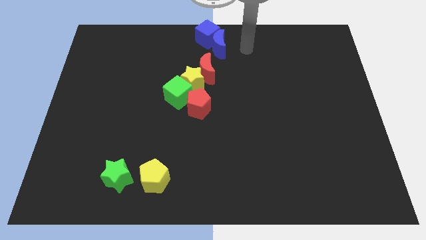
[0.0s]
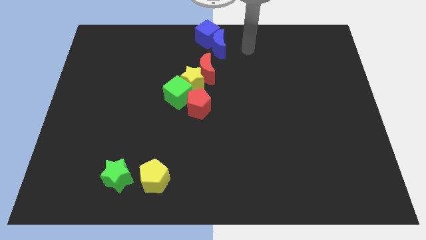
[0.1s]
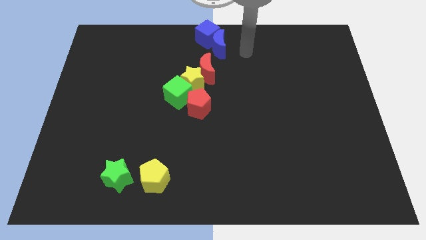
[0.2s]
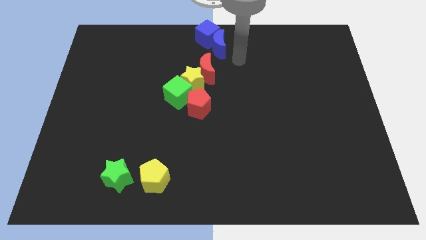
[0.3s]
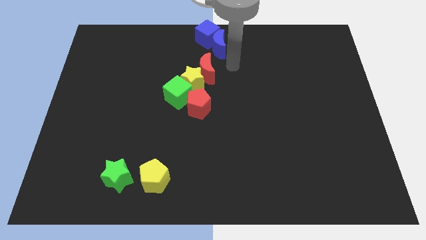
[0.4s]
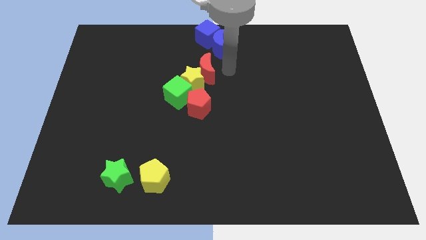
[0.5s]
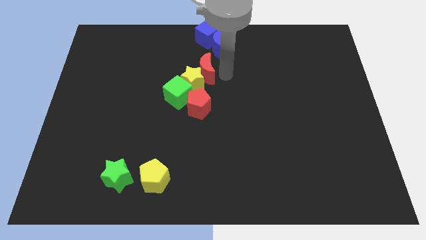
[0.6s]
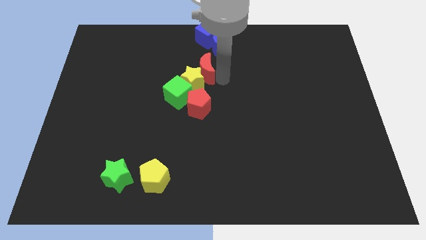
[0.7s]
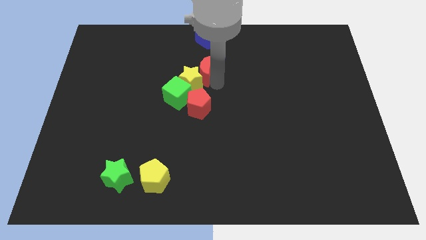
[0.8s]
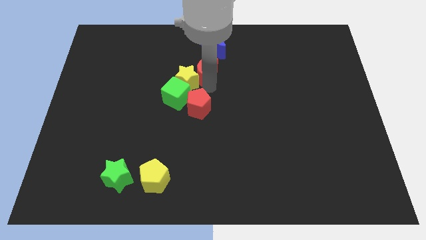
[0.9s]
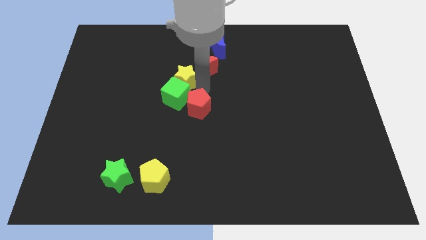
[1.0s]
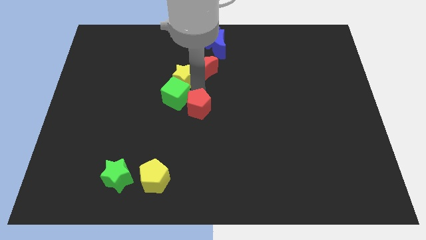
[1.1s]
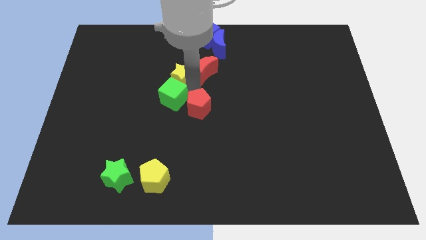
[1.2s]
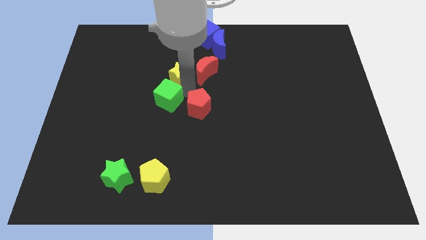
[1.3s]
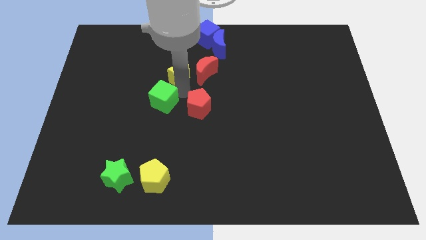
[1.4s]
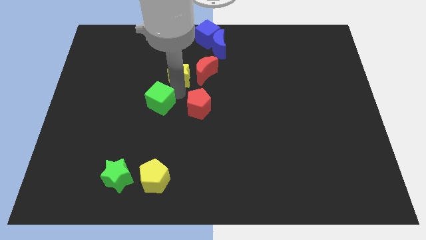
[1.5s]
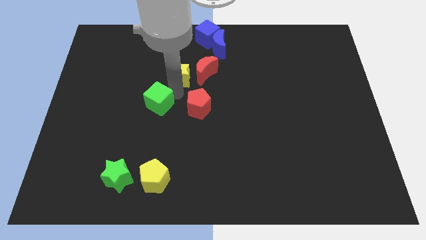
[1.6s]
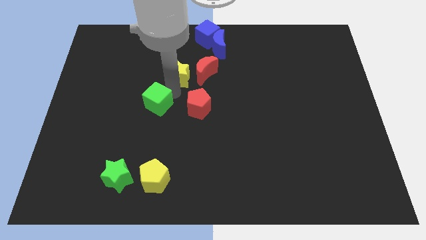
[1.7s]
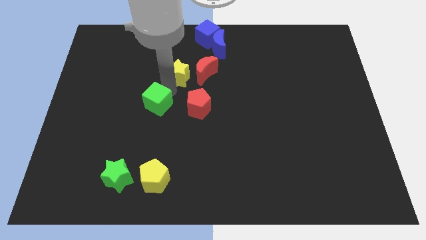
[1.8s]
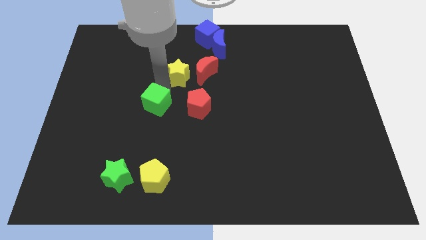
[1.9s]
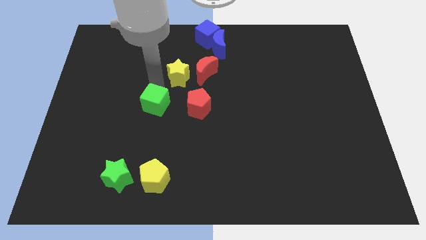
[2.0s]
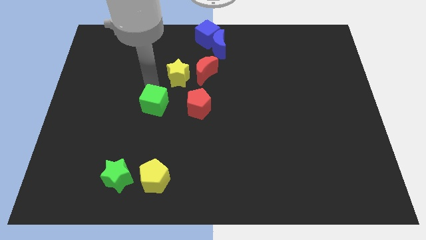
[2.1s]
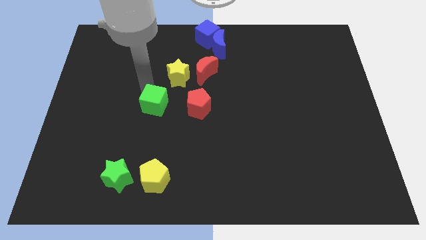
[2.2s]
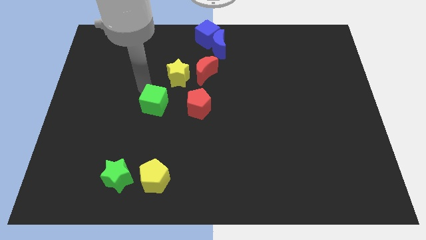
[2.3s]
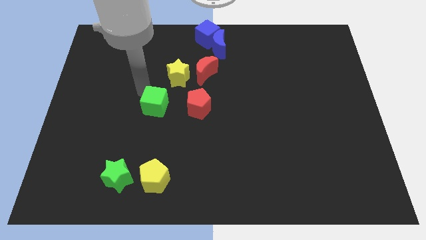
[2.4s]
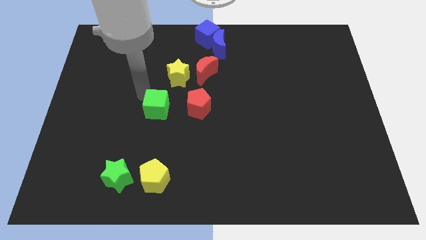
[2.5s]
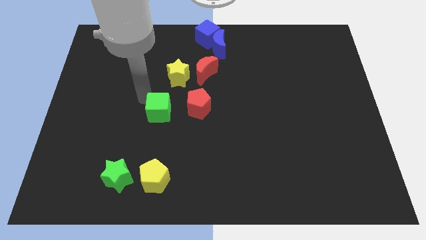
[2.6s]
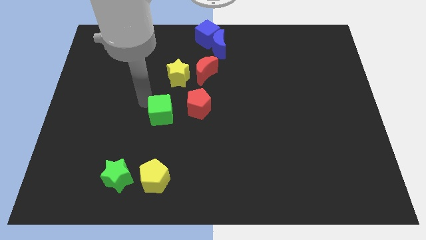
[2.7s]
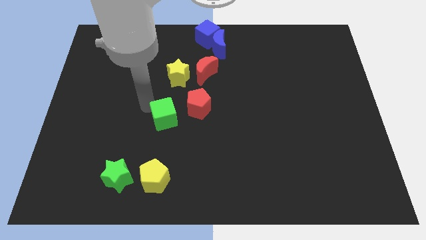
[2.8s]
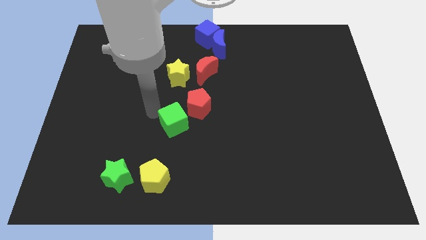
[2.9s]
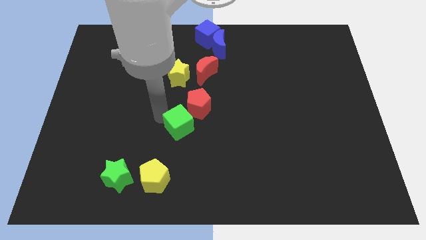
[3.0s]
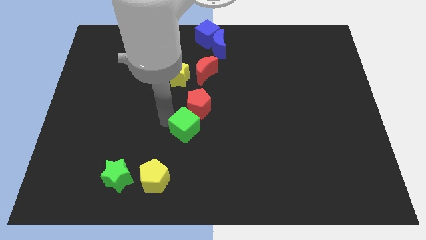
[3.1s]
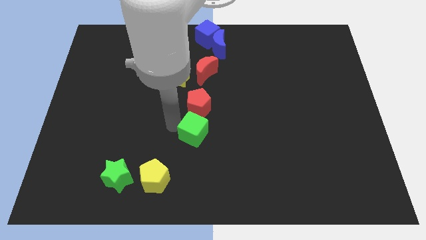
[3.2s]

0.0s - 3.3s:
place the green cube down to the red pentagon

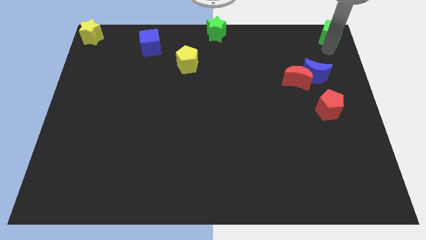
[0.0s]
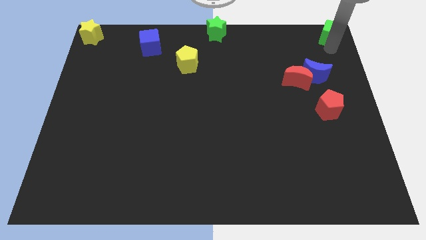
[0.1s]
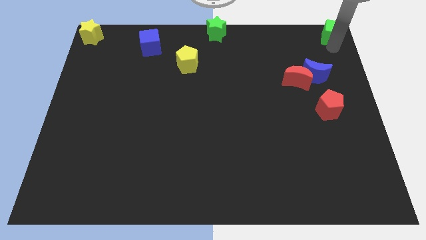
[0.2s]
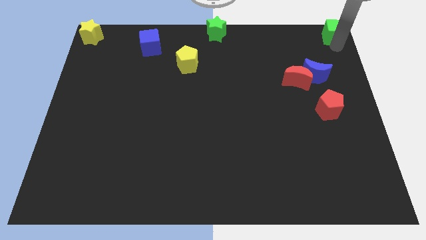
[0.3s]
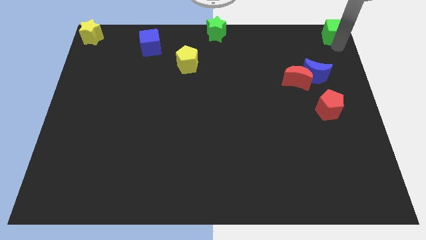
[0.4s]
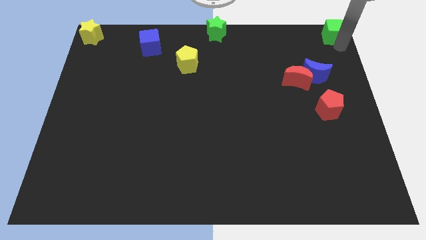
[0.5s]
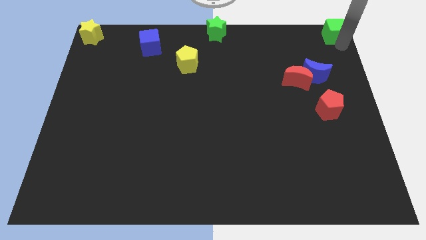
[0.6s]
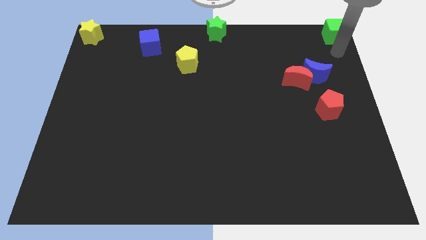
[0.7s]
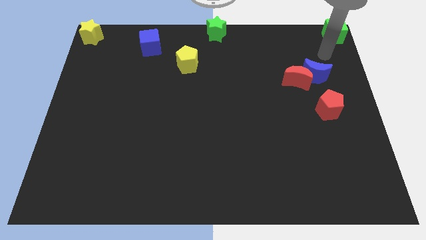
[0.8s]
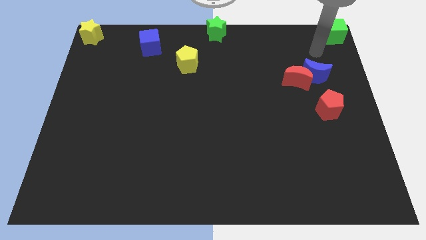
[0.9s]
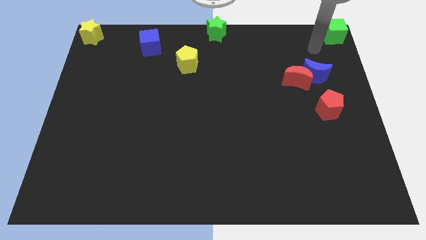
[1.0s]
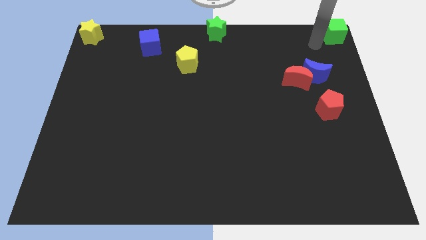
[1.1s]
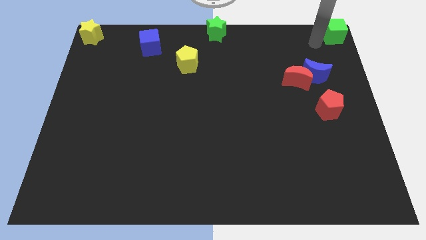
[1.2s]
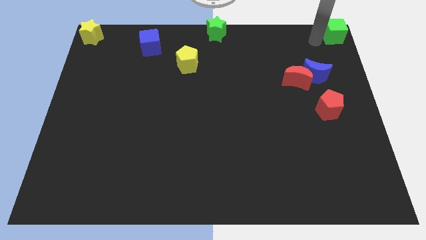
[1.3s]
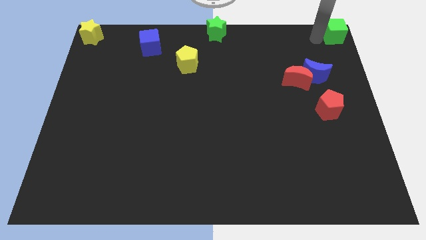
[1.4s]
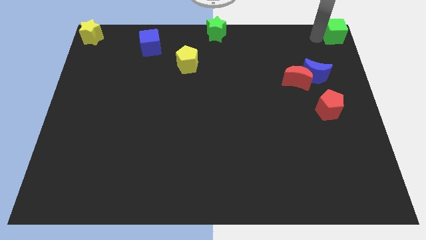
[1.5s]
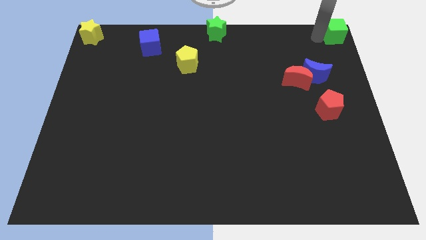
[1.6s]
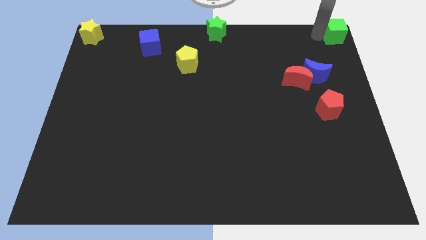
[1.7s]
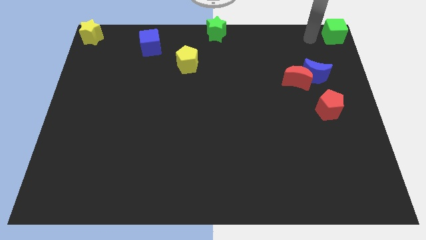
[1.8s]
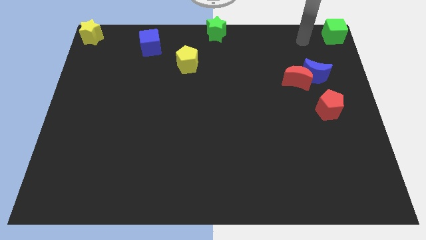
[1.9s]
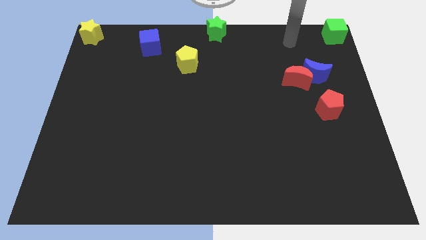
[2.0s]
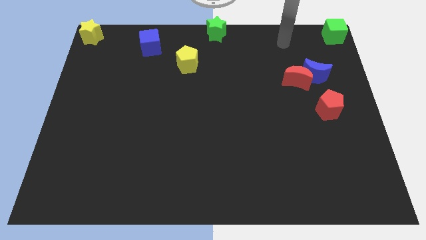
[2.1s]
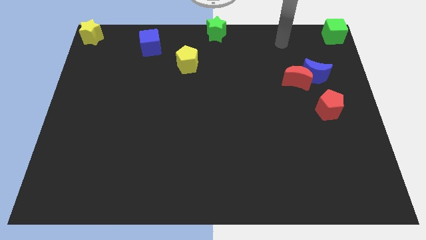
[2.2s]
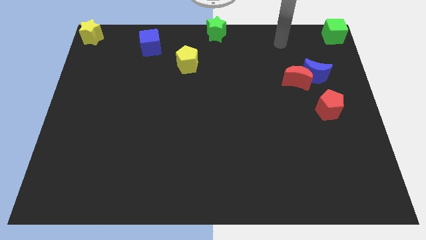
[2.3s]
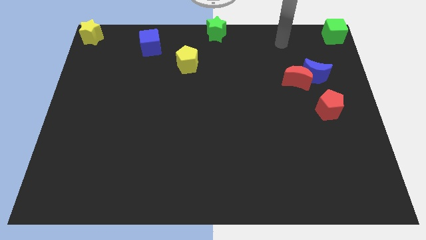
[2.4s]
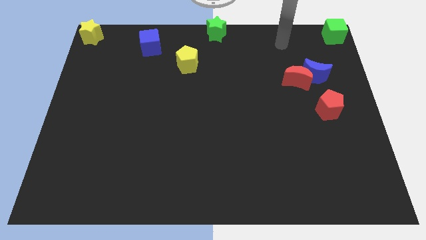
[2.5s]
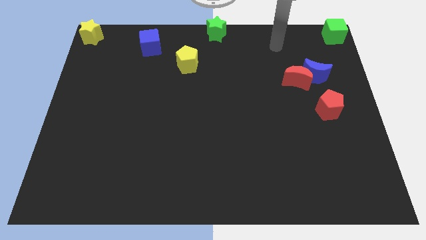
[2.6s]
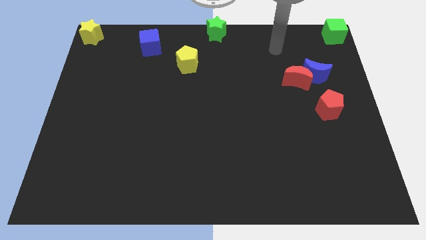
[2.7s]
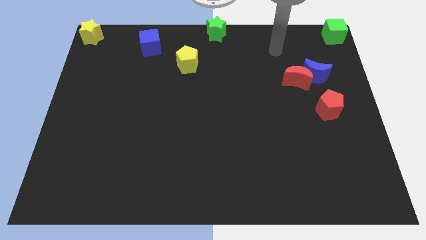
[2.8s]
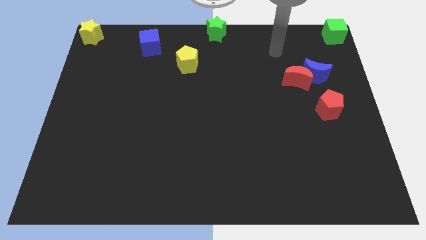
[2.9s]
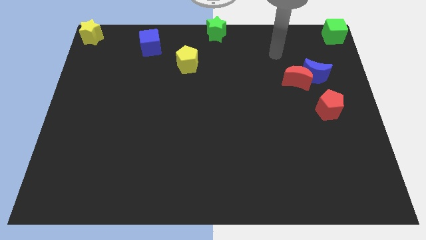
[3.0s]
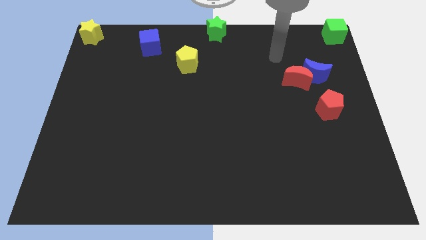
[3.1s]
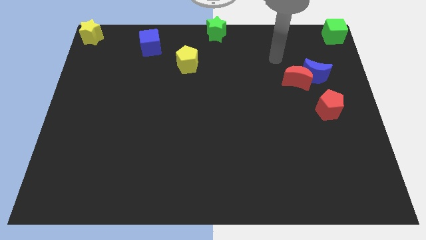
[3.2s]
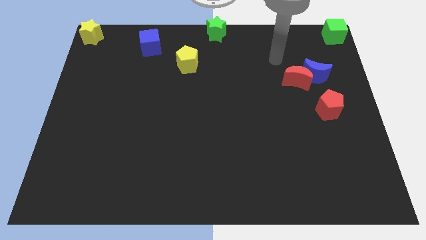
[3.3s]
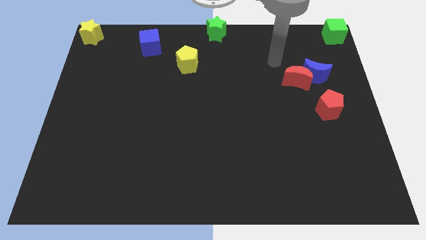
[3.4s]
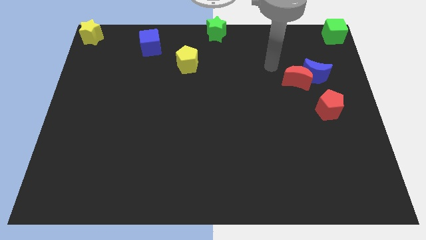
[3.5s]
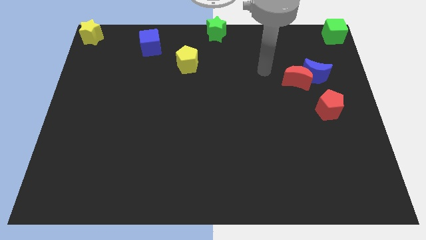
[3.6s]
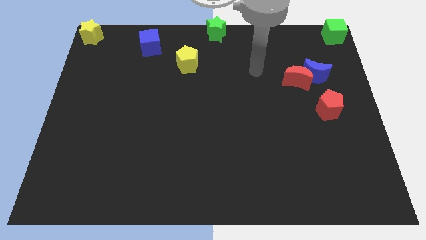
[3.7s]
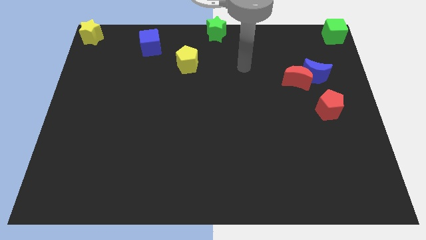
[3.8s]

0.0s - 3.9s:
move your arm away from the green cube

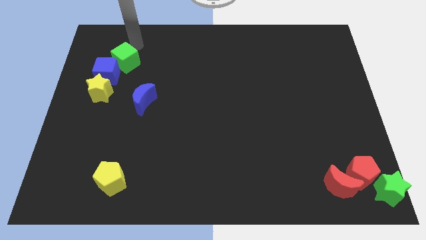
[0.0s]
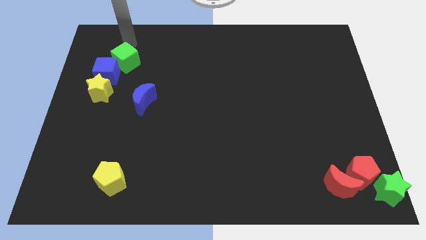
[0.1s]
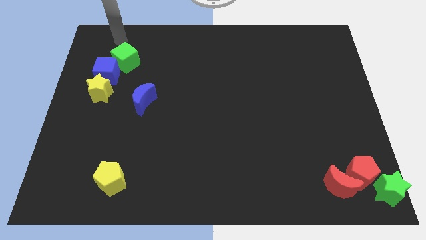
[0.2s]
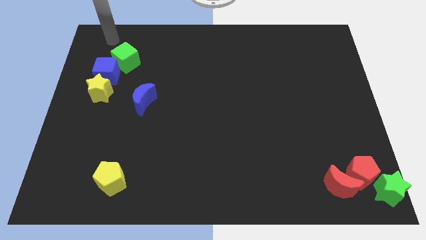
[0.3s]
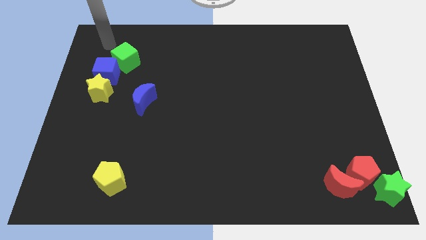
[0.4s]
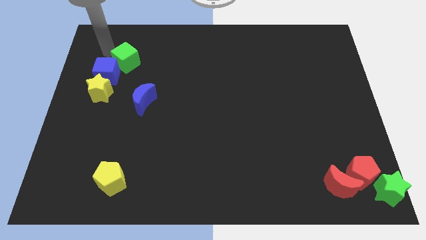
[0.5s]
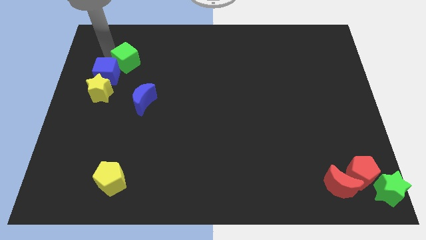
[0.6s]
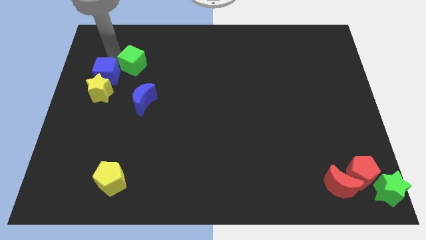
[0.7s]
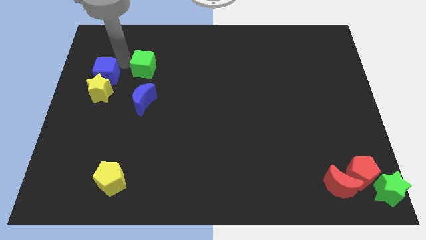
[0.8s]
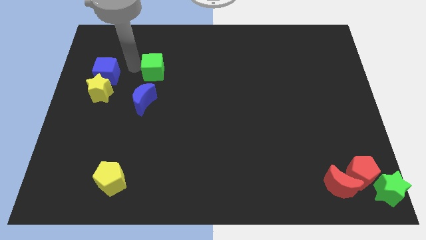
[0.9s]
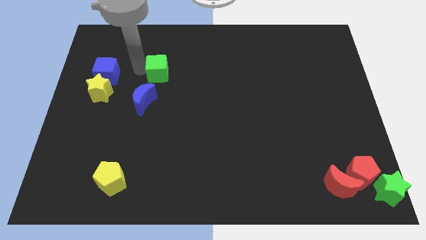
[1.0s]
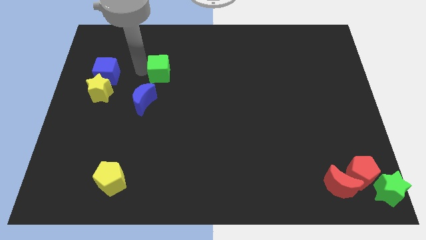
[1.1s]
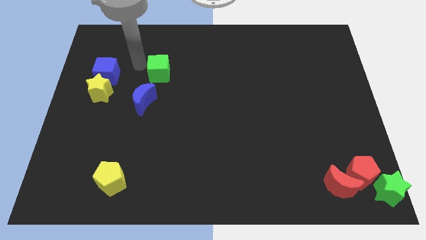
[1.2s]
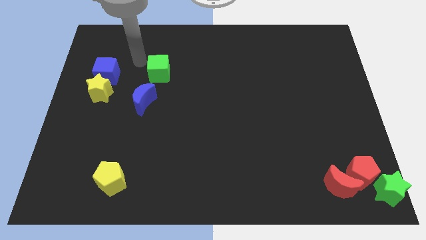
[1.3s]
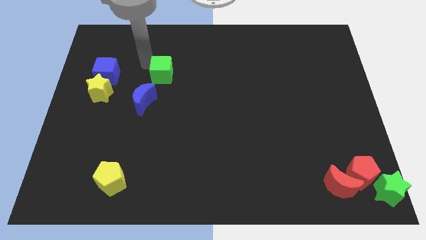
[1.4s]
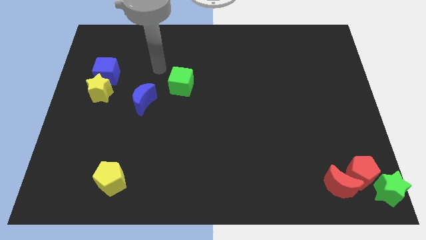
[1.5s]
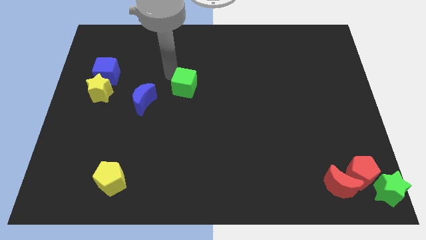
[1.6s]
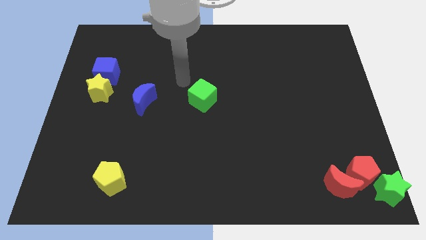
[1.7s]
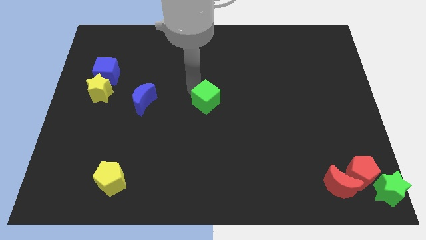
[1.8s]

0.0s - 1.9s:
place the green star at the right side of the blue moon

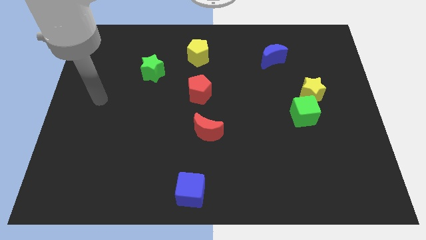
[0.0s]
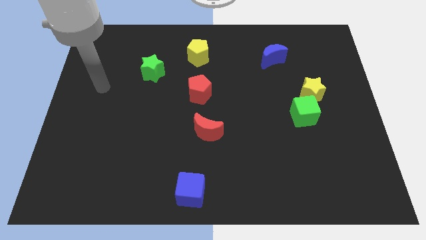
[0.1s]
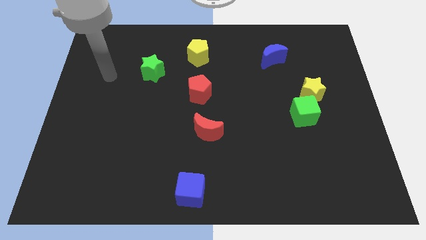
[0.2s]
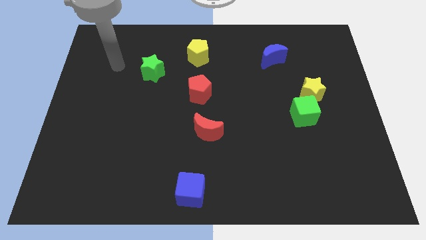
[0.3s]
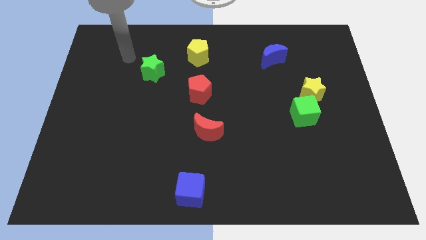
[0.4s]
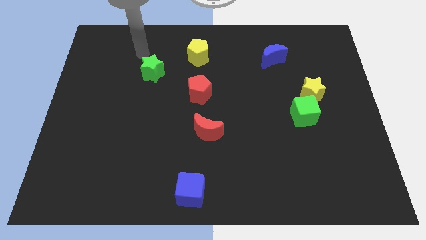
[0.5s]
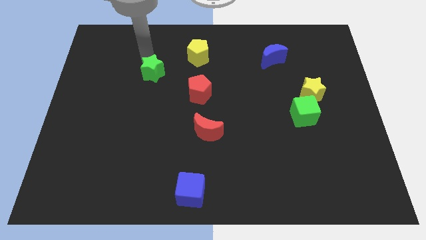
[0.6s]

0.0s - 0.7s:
point your arm on top of green star
